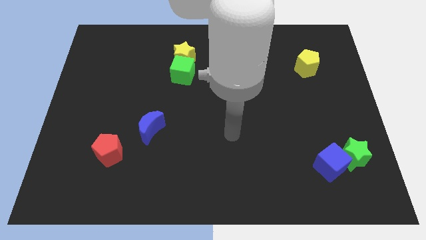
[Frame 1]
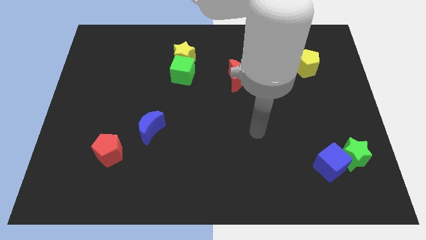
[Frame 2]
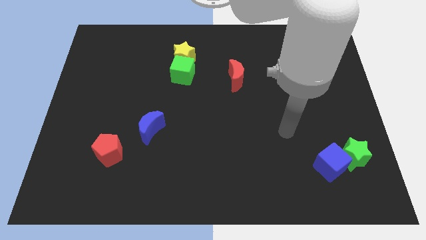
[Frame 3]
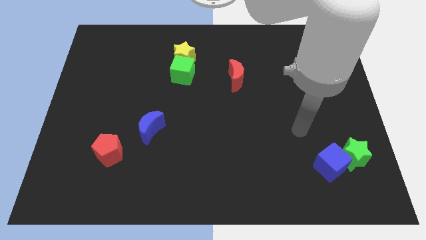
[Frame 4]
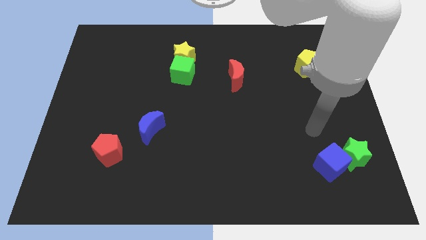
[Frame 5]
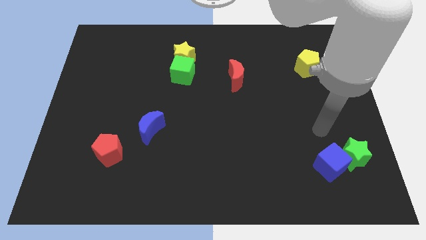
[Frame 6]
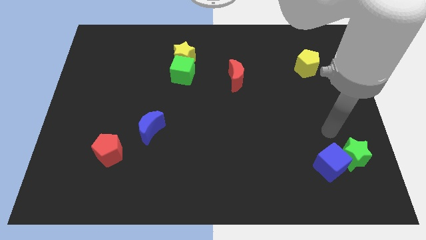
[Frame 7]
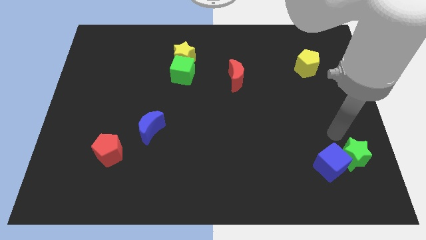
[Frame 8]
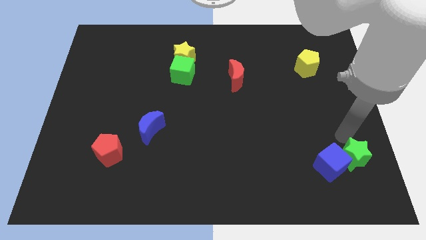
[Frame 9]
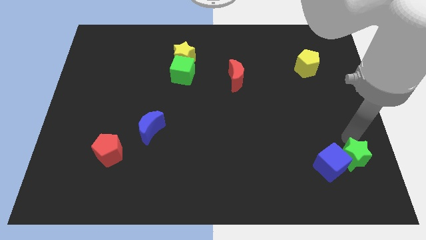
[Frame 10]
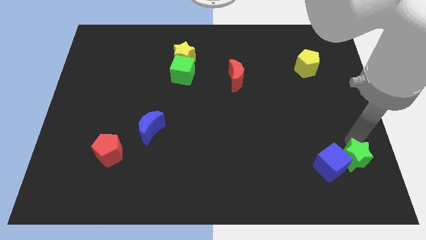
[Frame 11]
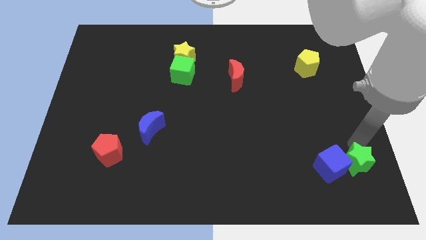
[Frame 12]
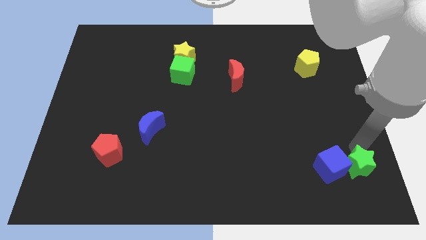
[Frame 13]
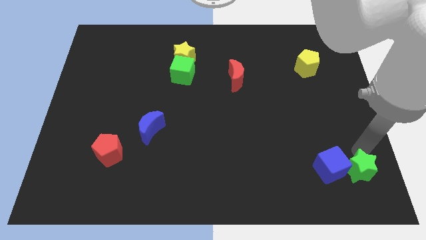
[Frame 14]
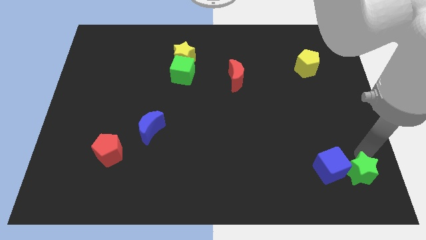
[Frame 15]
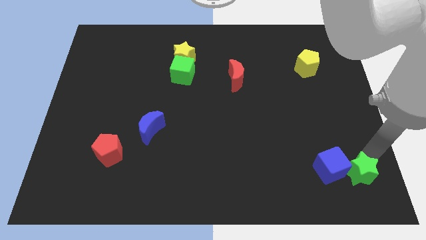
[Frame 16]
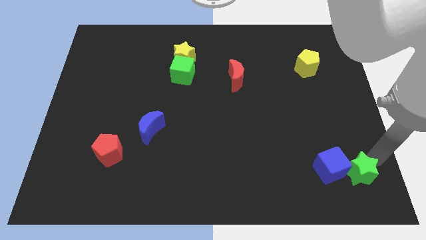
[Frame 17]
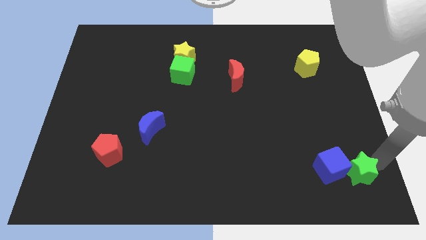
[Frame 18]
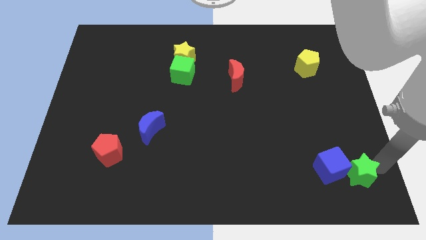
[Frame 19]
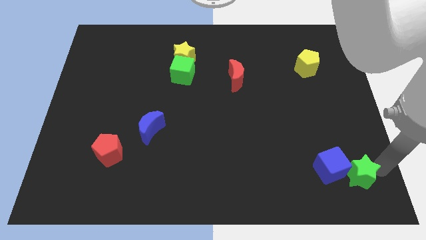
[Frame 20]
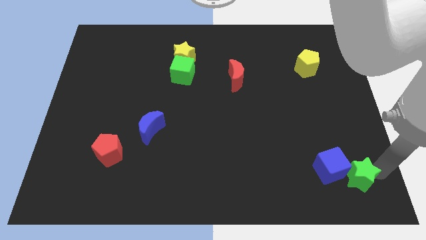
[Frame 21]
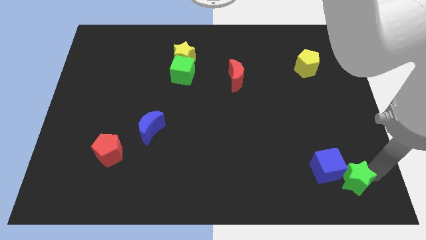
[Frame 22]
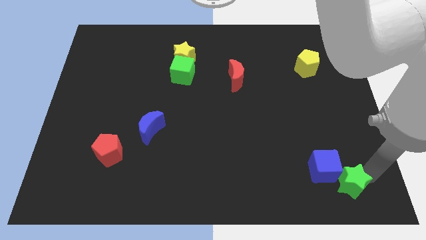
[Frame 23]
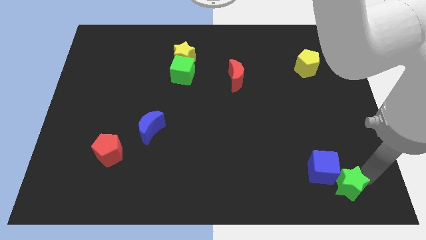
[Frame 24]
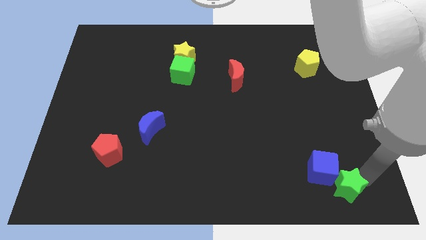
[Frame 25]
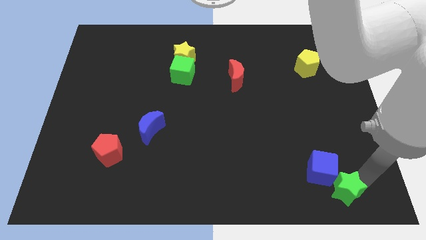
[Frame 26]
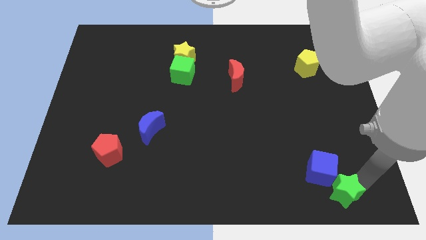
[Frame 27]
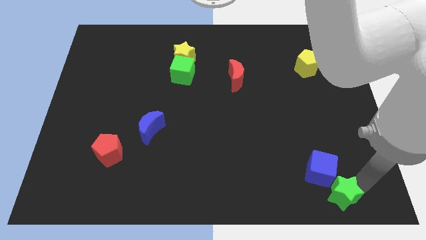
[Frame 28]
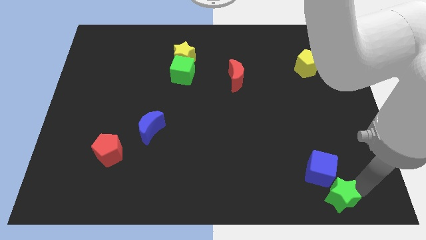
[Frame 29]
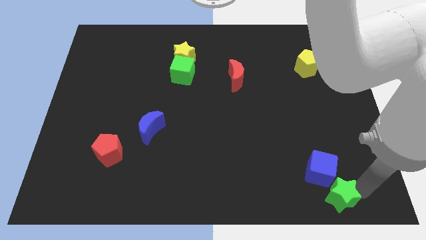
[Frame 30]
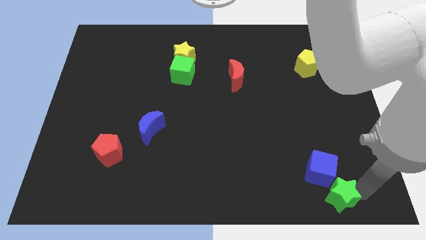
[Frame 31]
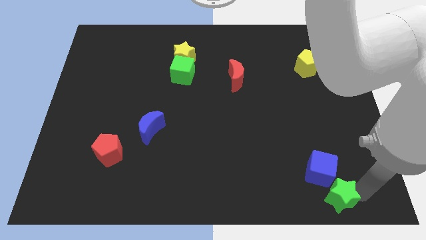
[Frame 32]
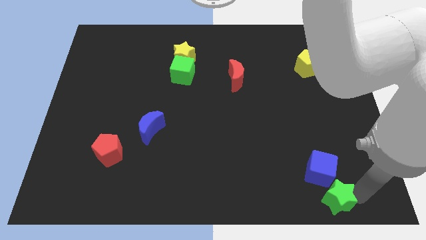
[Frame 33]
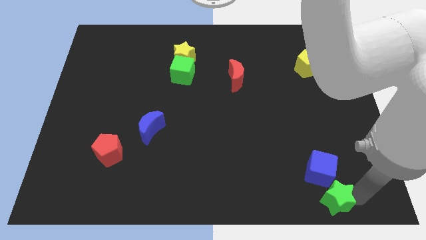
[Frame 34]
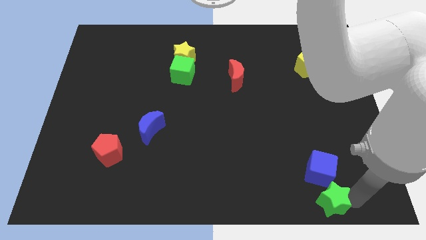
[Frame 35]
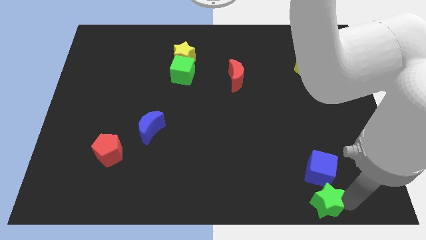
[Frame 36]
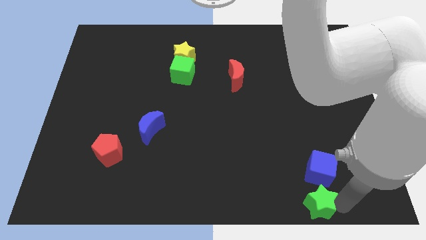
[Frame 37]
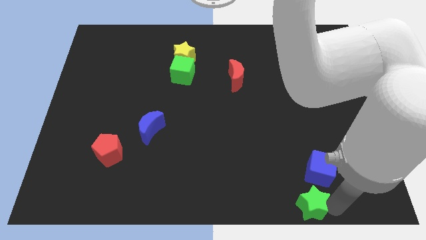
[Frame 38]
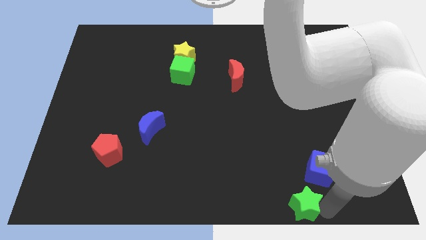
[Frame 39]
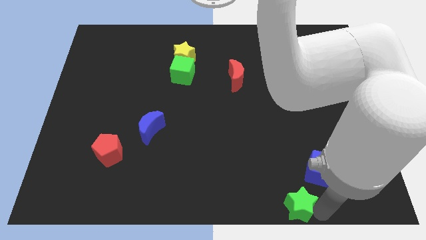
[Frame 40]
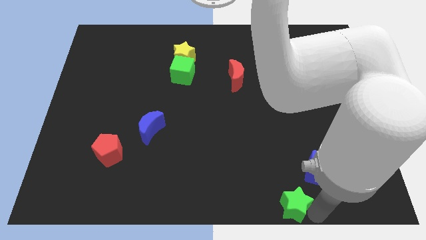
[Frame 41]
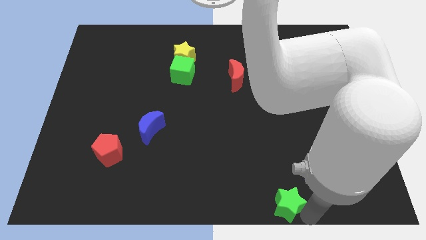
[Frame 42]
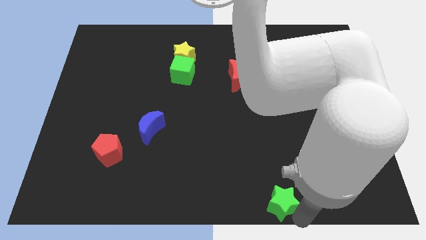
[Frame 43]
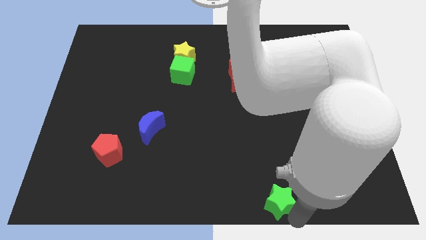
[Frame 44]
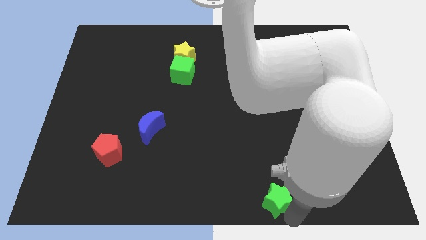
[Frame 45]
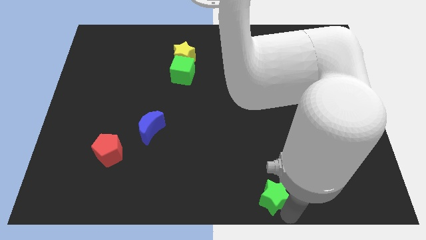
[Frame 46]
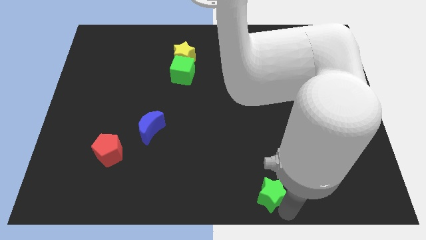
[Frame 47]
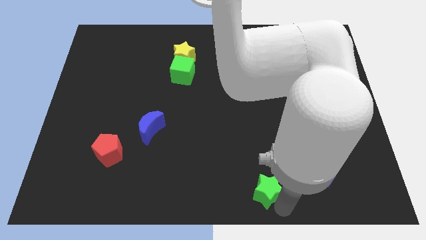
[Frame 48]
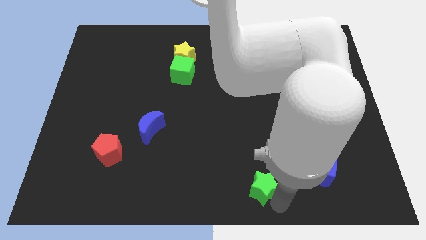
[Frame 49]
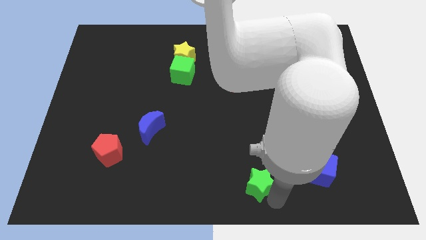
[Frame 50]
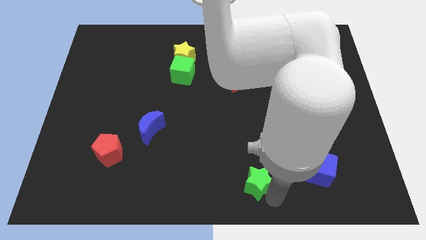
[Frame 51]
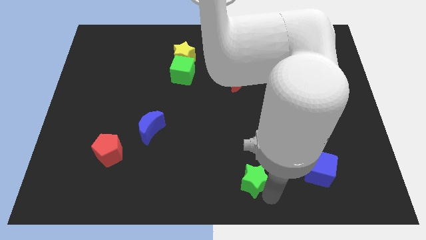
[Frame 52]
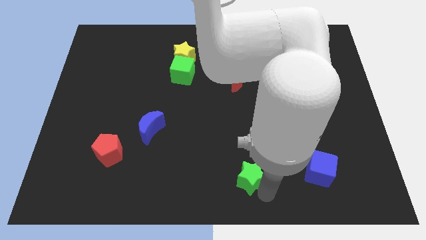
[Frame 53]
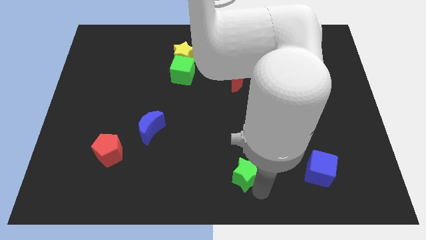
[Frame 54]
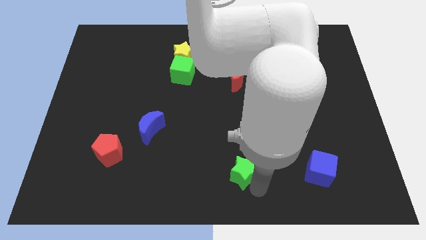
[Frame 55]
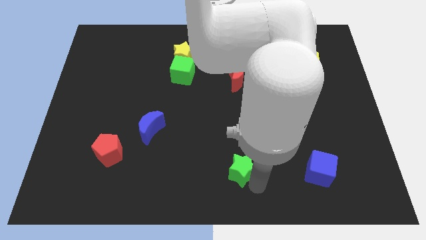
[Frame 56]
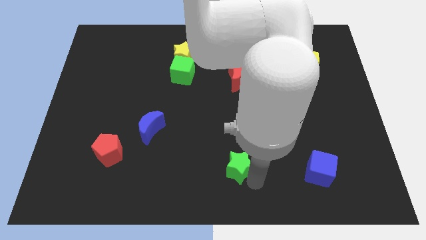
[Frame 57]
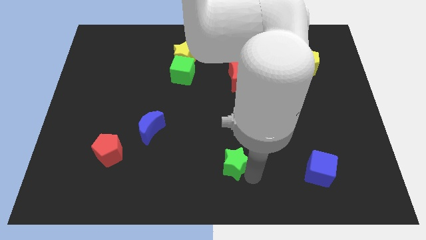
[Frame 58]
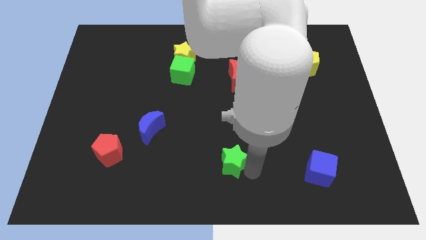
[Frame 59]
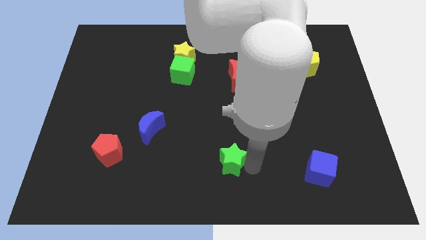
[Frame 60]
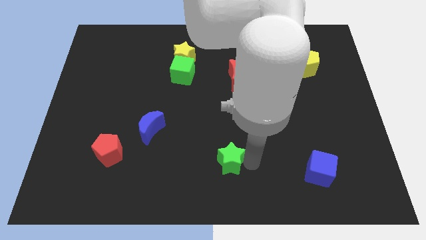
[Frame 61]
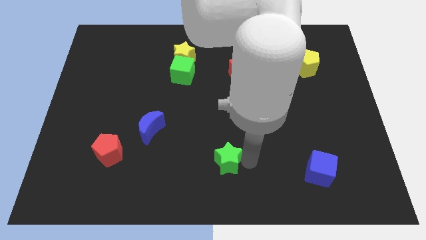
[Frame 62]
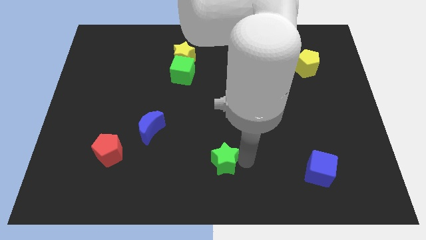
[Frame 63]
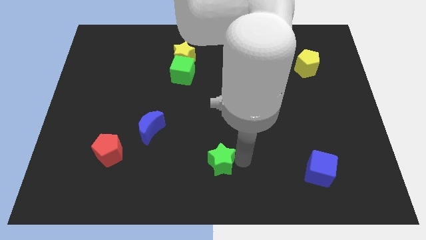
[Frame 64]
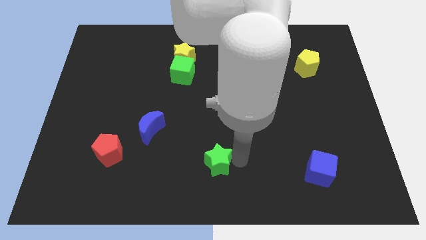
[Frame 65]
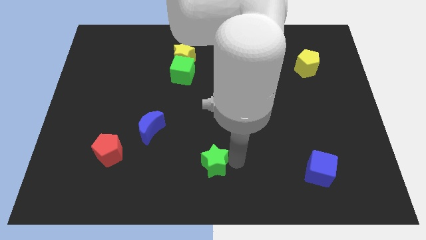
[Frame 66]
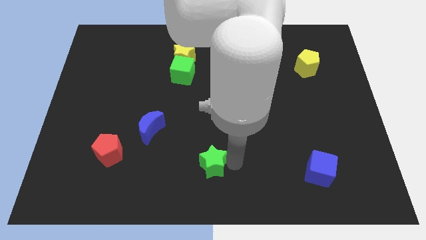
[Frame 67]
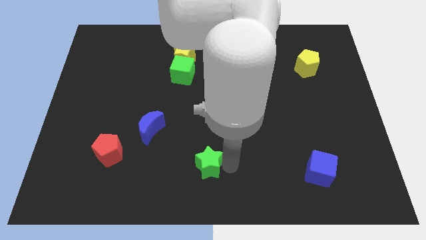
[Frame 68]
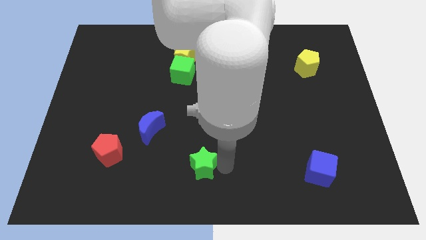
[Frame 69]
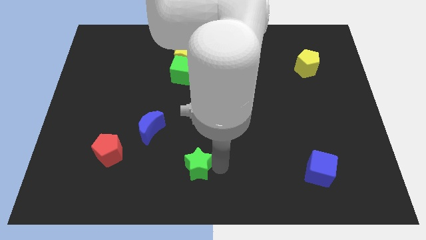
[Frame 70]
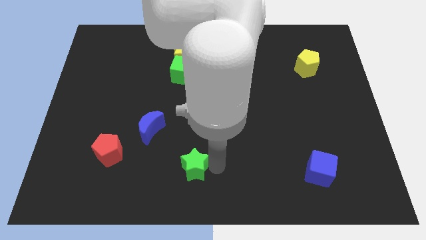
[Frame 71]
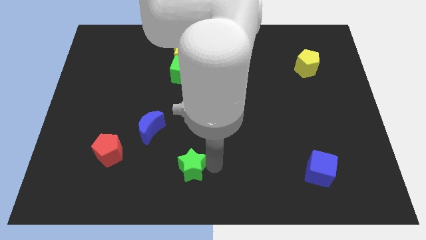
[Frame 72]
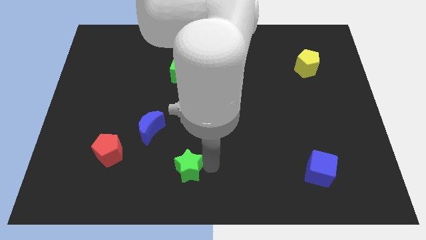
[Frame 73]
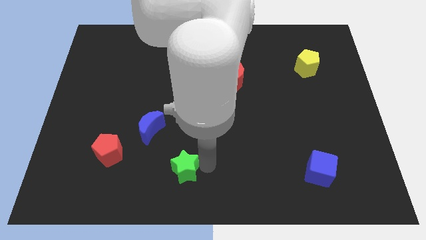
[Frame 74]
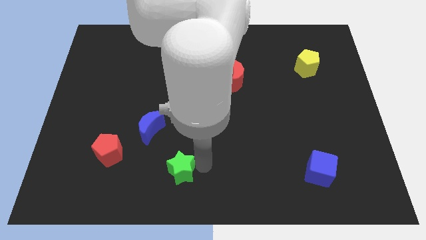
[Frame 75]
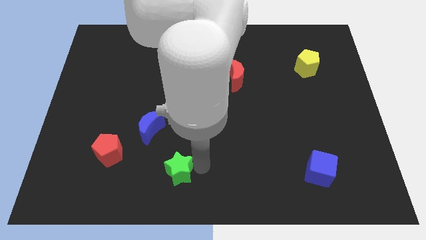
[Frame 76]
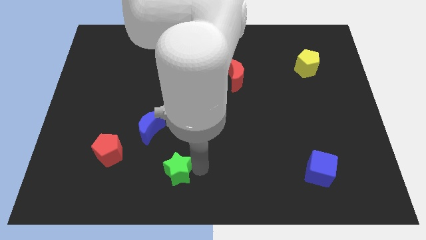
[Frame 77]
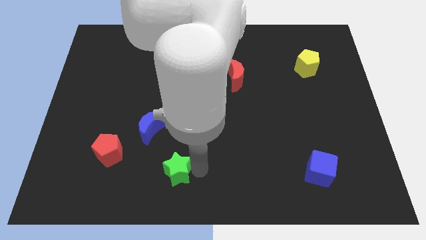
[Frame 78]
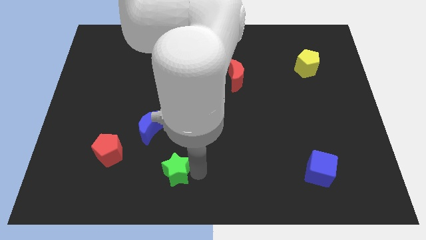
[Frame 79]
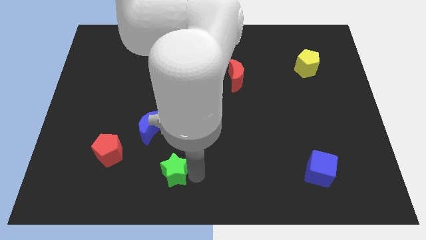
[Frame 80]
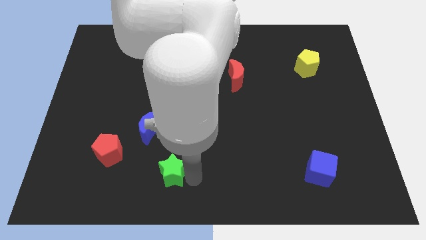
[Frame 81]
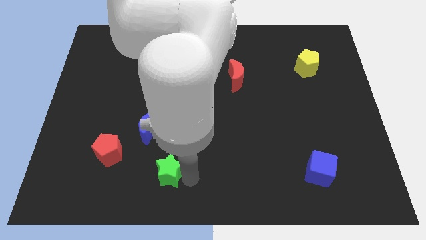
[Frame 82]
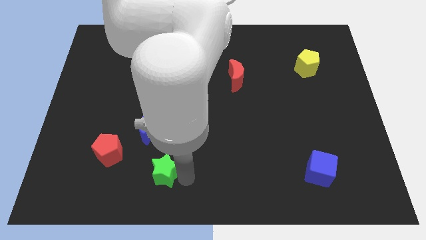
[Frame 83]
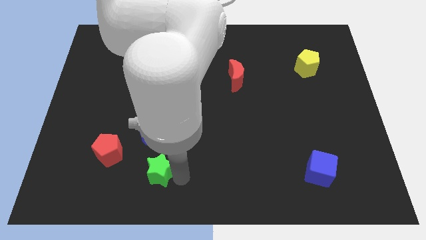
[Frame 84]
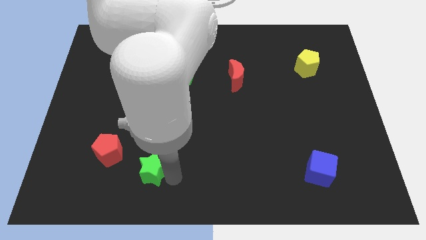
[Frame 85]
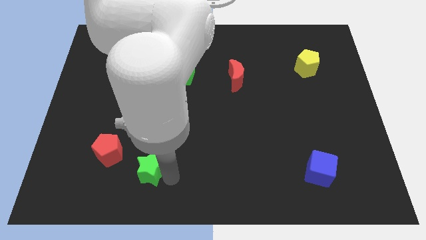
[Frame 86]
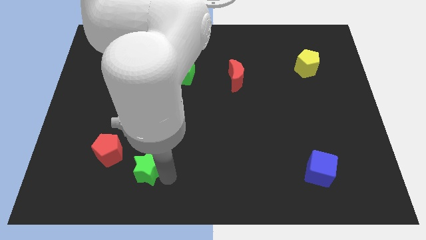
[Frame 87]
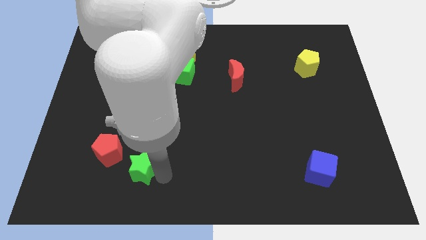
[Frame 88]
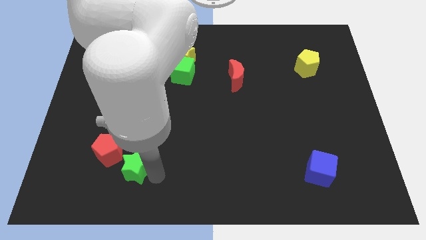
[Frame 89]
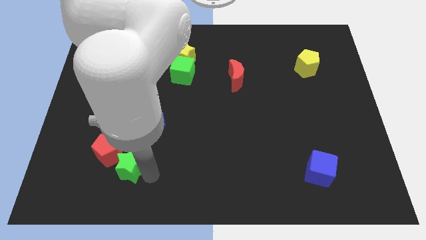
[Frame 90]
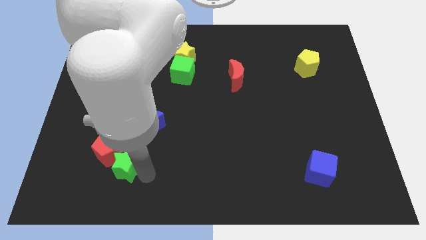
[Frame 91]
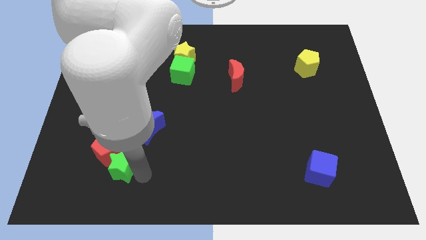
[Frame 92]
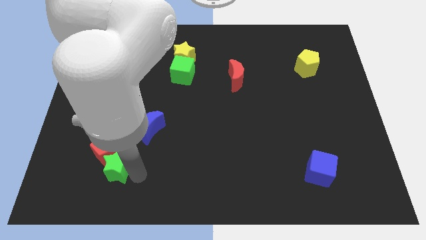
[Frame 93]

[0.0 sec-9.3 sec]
put the green star next to the red pentagon
